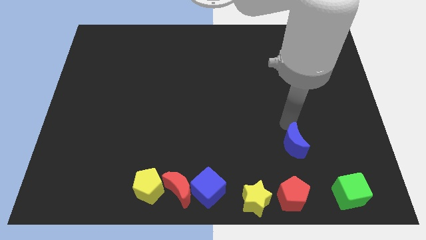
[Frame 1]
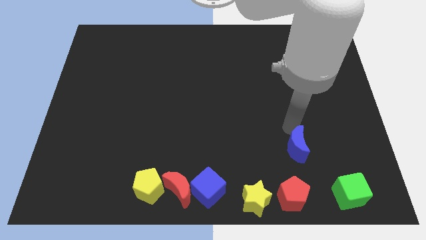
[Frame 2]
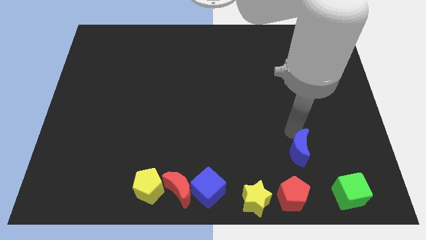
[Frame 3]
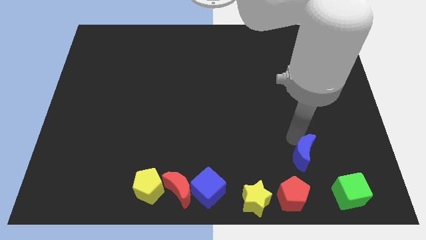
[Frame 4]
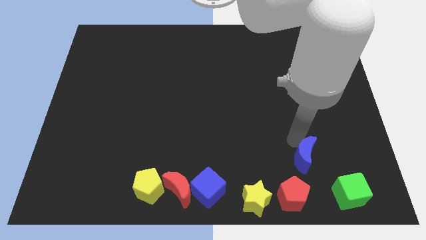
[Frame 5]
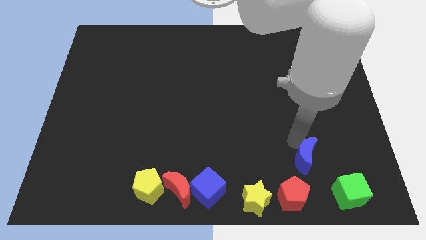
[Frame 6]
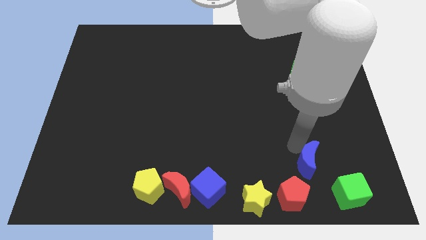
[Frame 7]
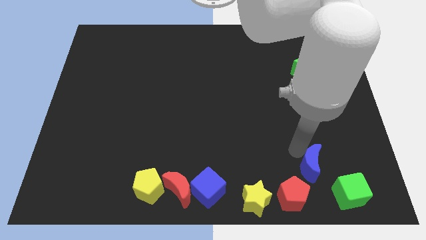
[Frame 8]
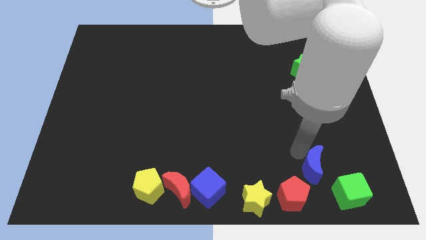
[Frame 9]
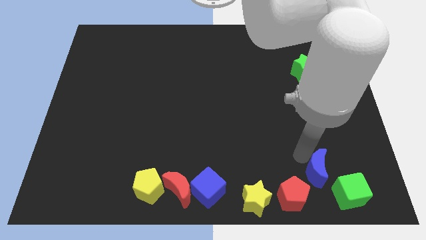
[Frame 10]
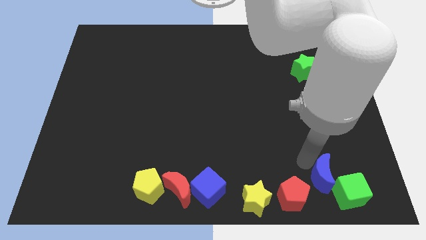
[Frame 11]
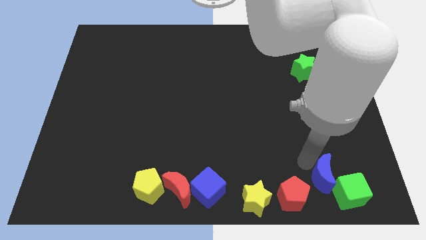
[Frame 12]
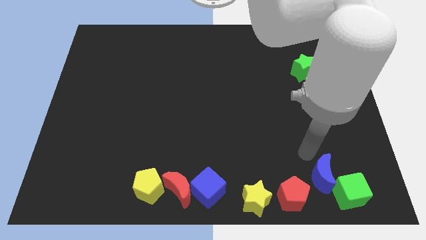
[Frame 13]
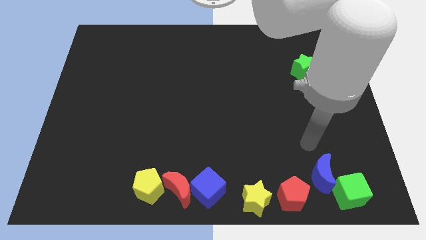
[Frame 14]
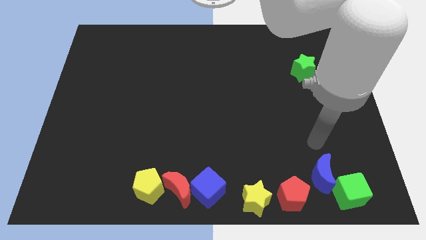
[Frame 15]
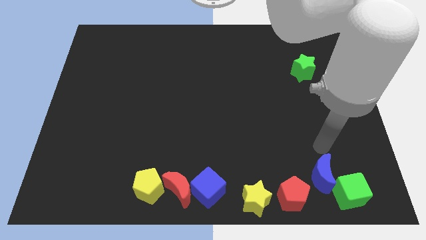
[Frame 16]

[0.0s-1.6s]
place the blue crescent close to green cube

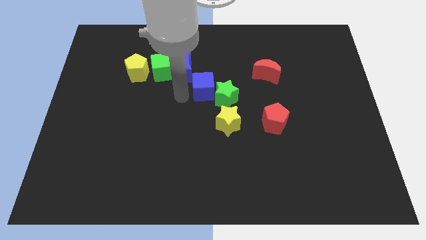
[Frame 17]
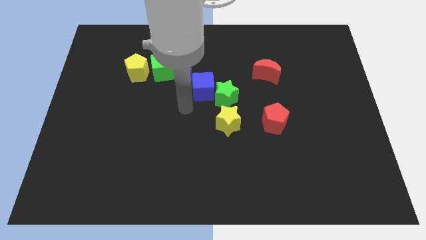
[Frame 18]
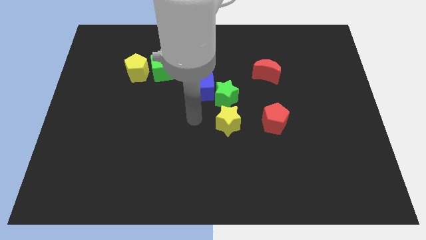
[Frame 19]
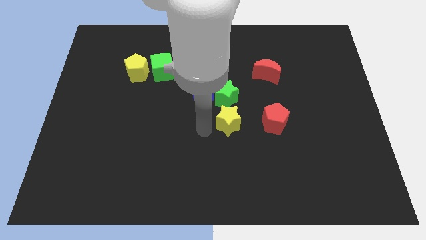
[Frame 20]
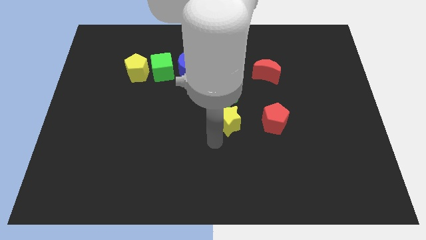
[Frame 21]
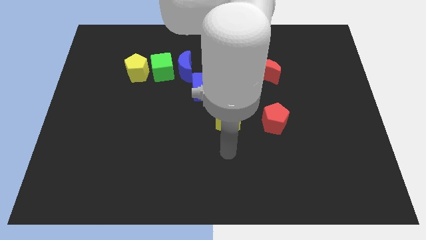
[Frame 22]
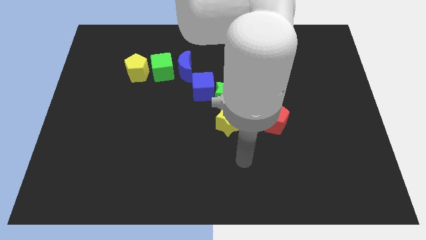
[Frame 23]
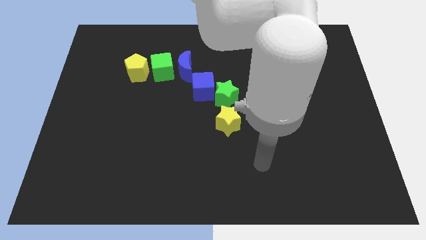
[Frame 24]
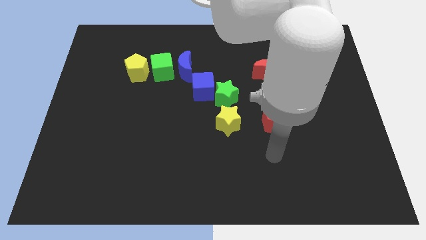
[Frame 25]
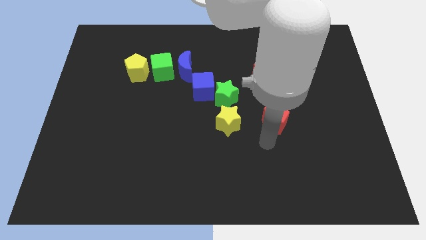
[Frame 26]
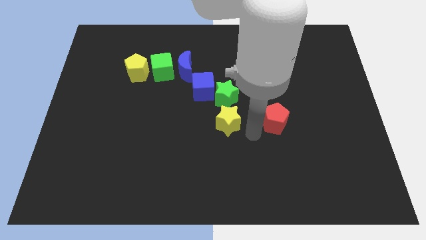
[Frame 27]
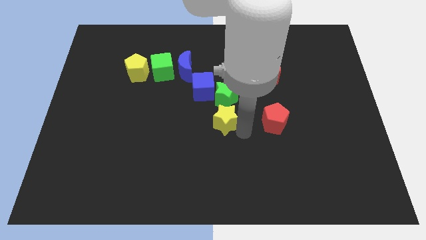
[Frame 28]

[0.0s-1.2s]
move your arm towards the bottom right of the yellow star

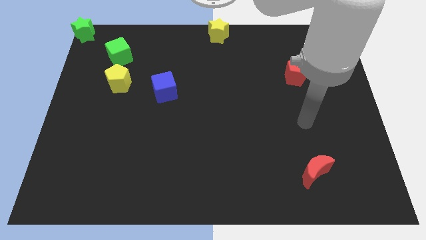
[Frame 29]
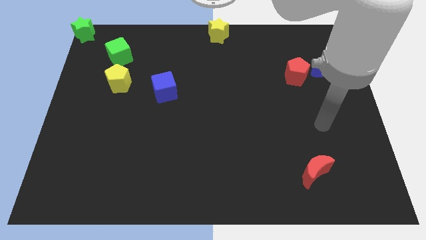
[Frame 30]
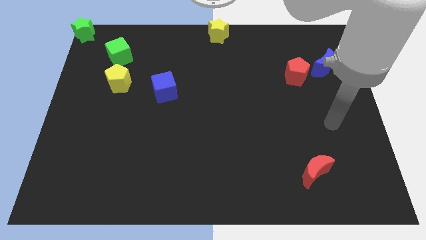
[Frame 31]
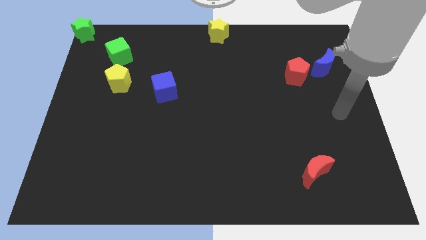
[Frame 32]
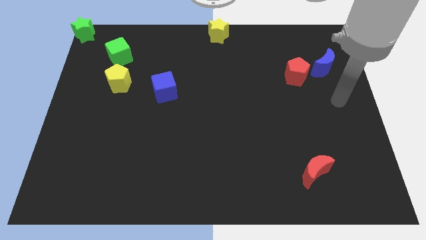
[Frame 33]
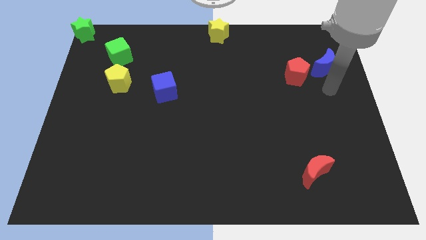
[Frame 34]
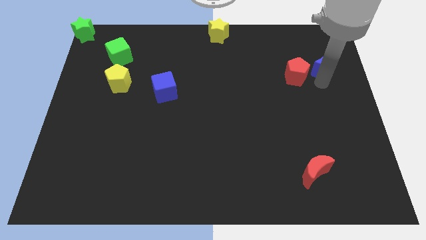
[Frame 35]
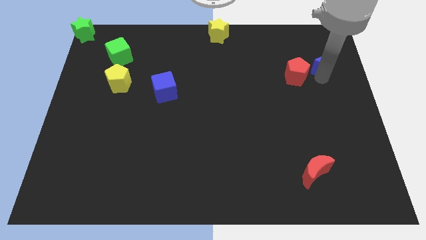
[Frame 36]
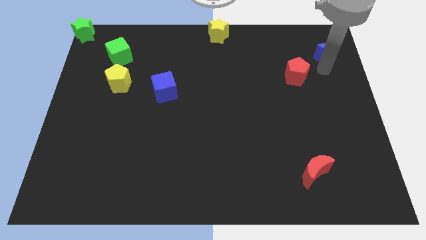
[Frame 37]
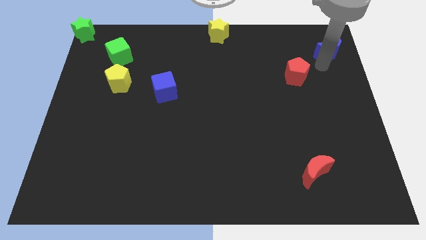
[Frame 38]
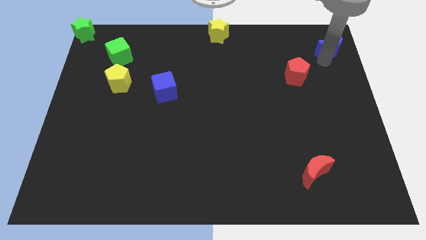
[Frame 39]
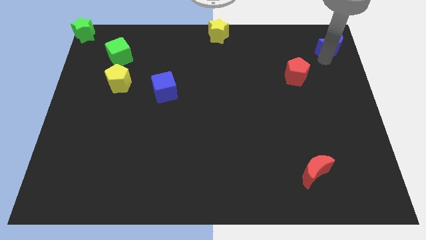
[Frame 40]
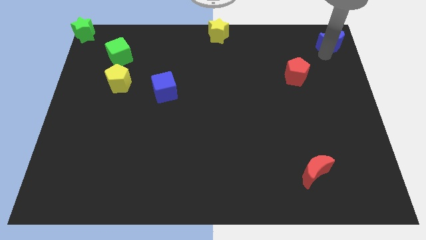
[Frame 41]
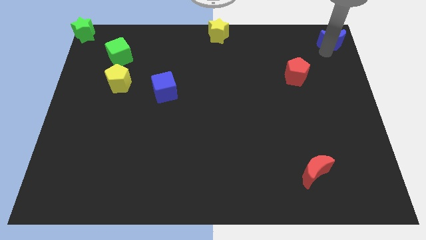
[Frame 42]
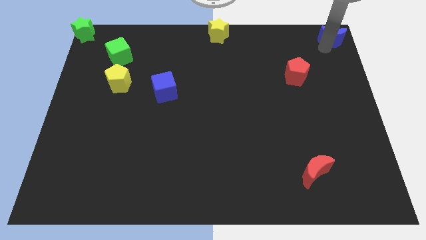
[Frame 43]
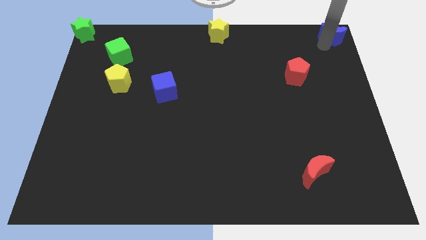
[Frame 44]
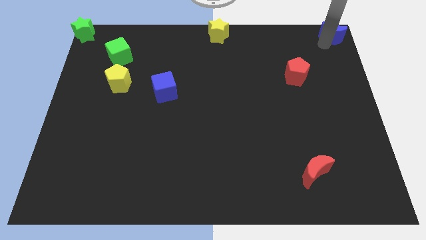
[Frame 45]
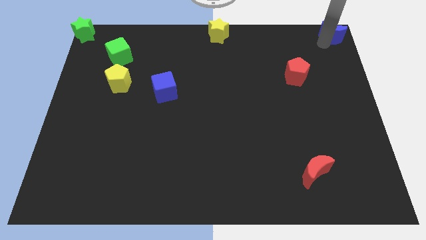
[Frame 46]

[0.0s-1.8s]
push the blue crescent towards the top right of the board

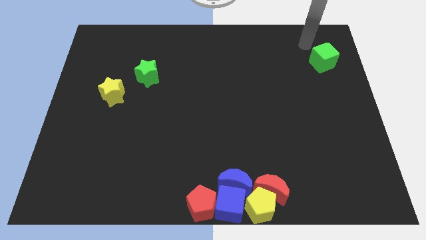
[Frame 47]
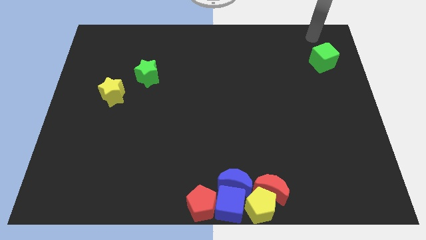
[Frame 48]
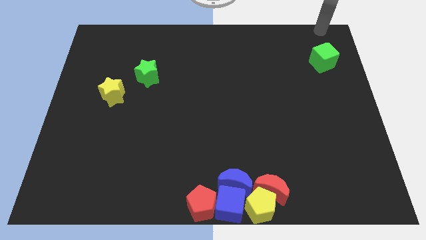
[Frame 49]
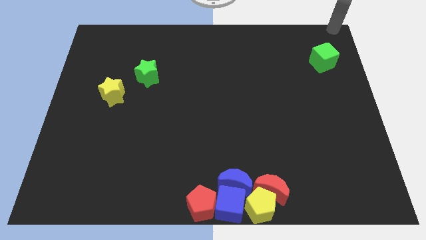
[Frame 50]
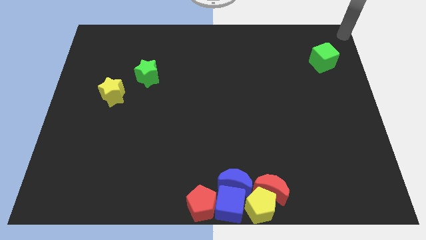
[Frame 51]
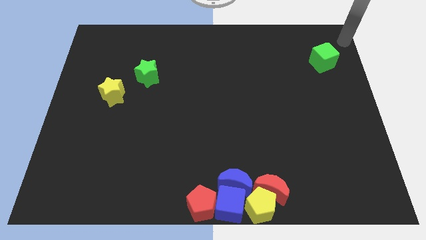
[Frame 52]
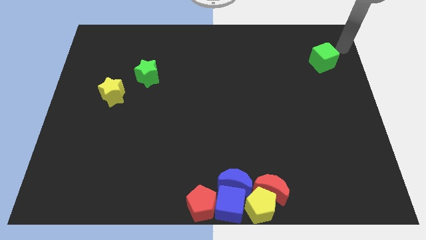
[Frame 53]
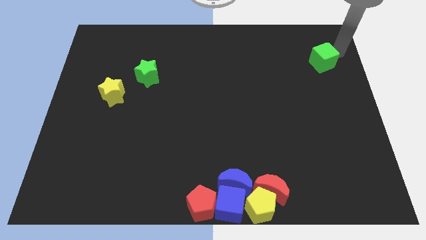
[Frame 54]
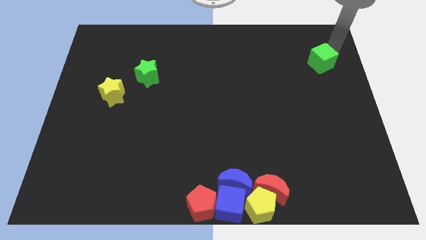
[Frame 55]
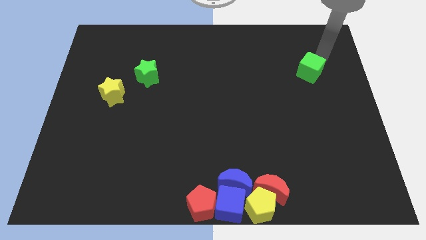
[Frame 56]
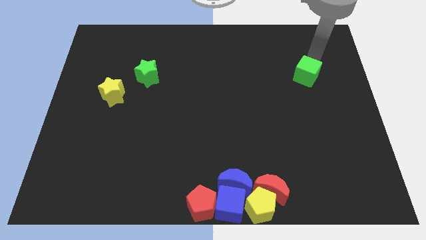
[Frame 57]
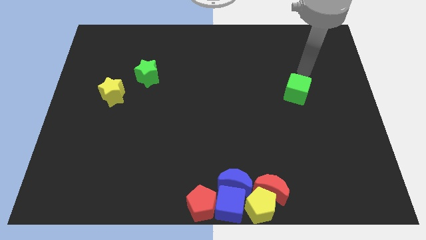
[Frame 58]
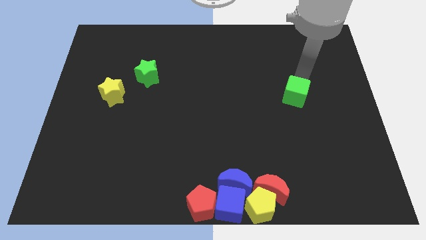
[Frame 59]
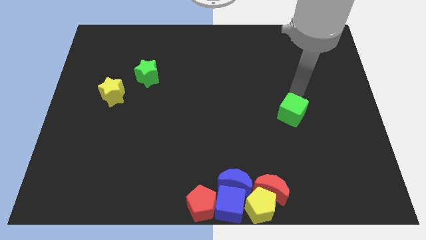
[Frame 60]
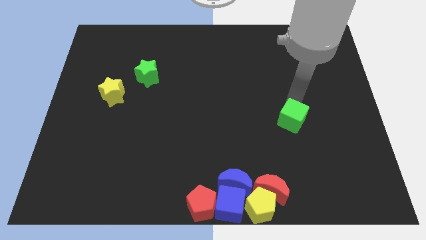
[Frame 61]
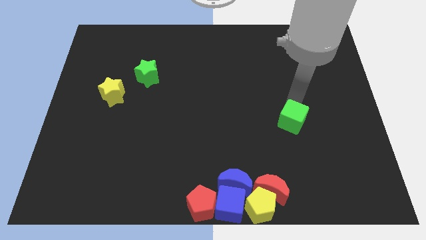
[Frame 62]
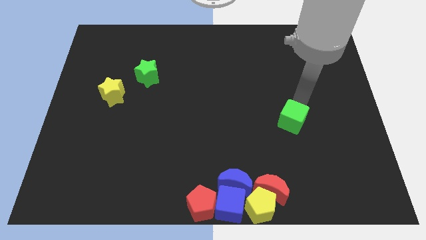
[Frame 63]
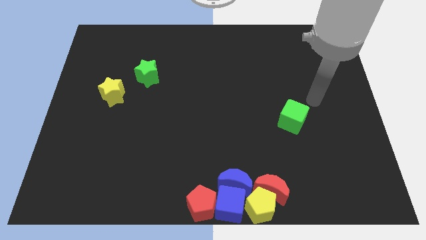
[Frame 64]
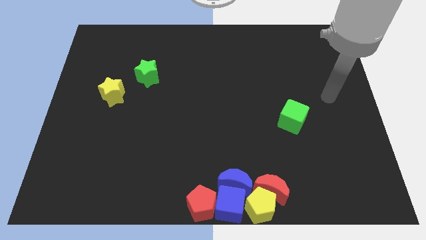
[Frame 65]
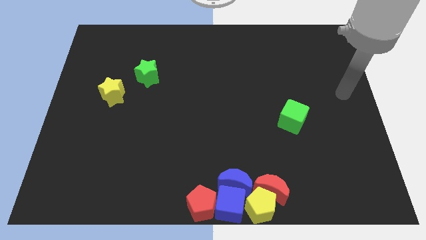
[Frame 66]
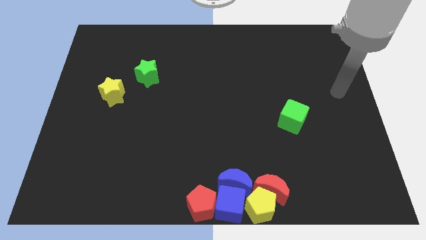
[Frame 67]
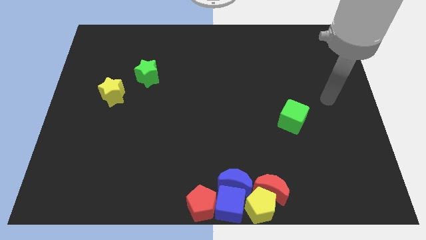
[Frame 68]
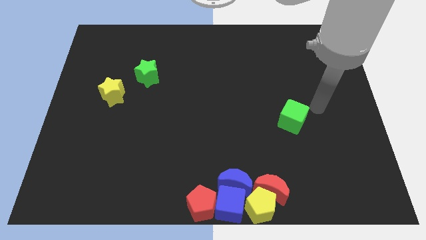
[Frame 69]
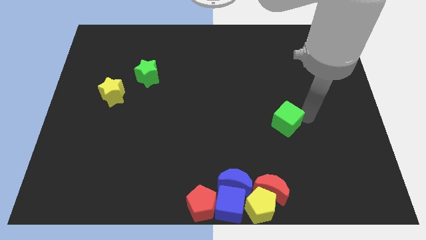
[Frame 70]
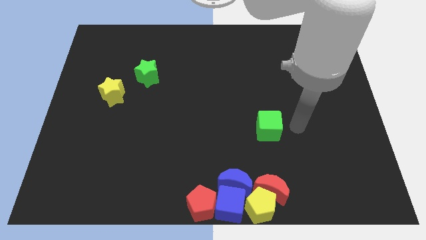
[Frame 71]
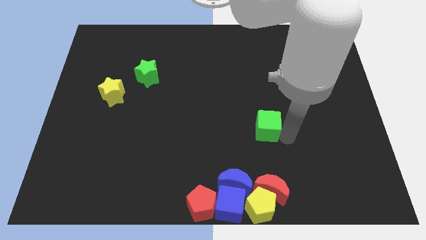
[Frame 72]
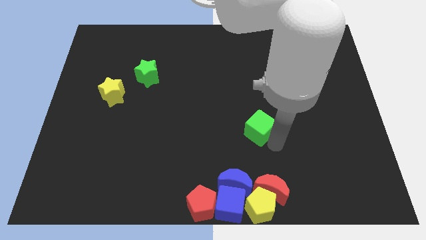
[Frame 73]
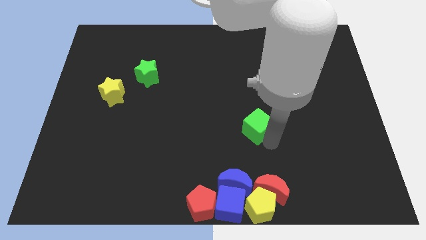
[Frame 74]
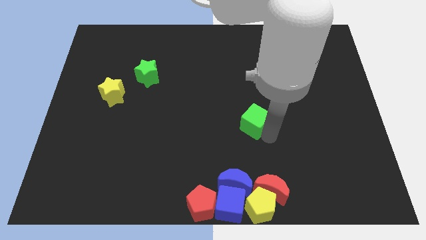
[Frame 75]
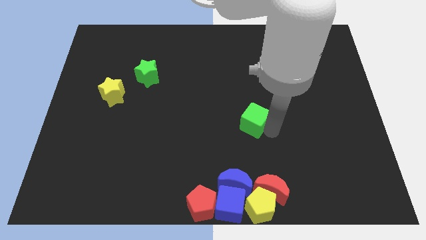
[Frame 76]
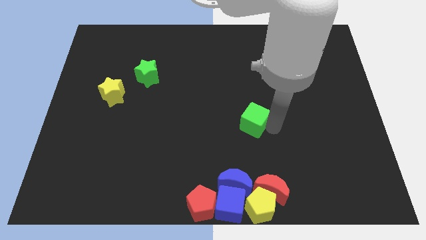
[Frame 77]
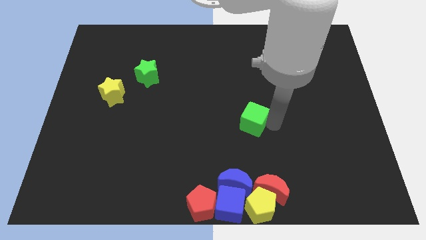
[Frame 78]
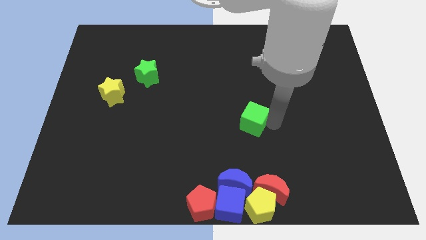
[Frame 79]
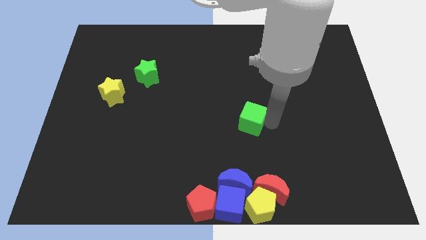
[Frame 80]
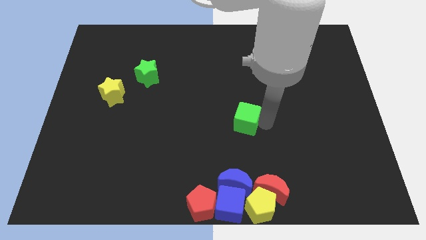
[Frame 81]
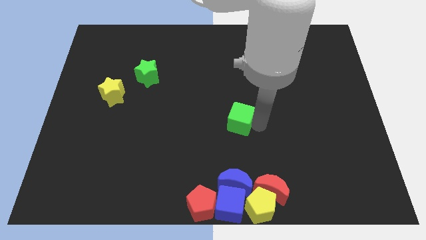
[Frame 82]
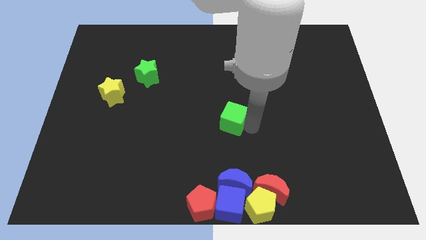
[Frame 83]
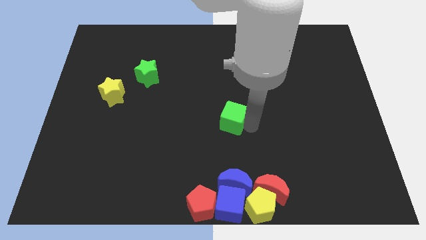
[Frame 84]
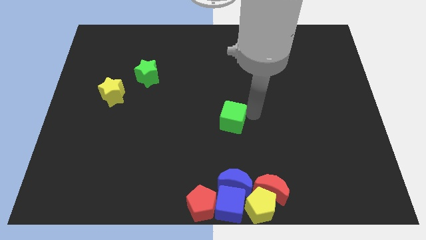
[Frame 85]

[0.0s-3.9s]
place the green cube vertically above the blue crescent

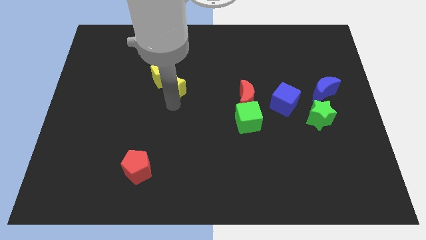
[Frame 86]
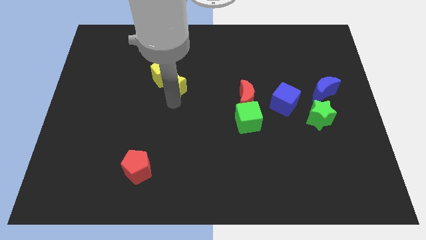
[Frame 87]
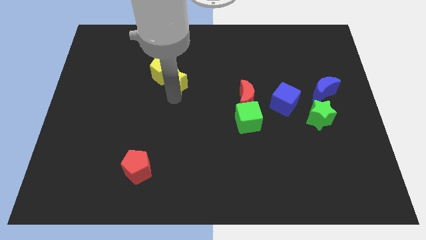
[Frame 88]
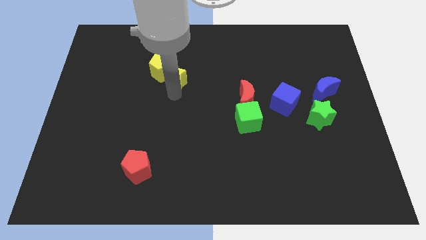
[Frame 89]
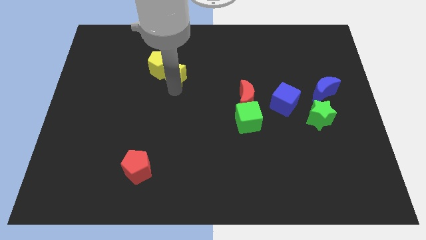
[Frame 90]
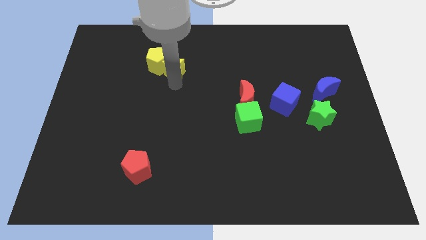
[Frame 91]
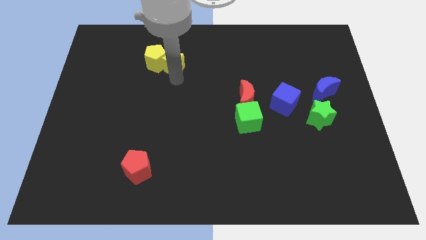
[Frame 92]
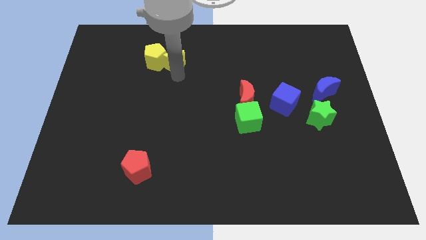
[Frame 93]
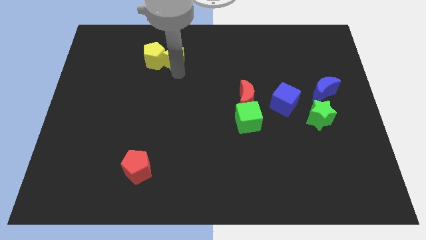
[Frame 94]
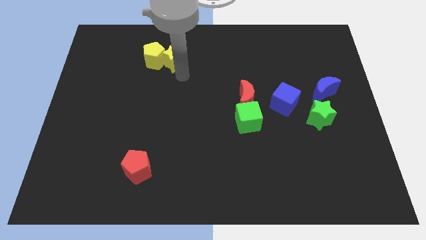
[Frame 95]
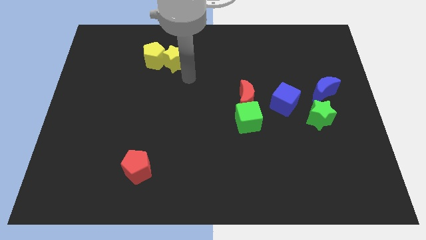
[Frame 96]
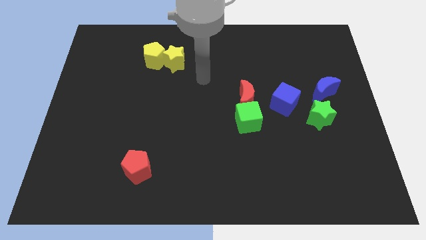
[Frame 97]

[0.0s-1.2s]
push the yellow star into the yellow pentagon
